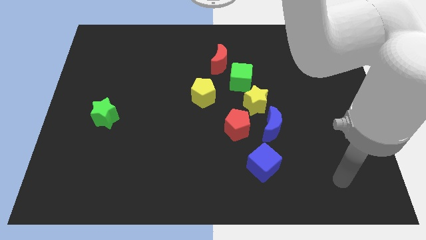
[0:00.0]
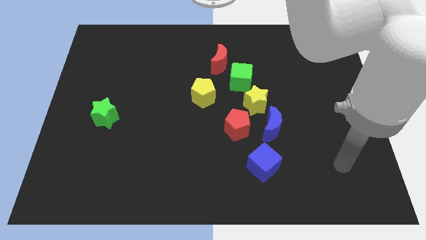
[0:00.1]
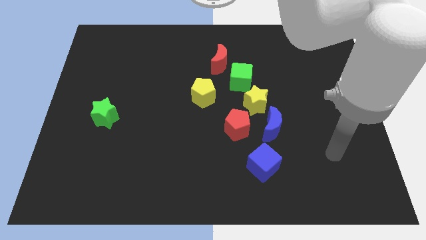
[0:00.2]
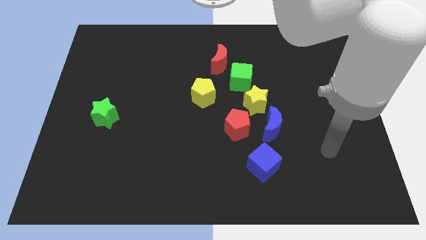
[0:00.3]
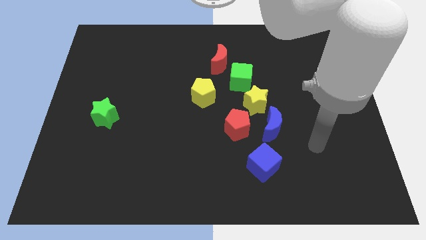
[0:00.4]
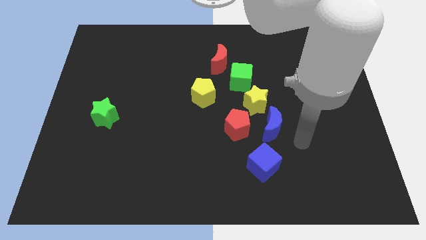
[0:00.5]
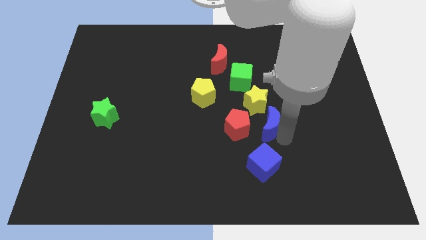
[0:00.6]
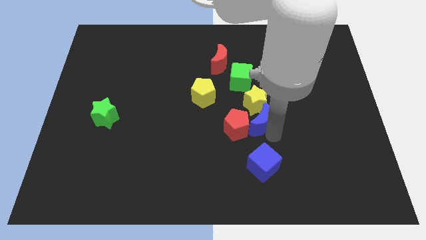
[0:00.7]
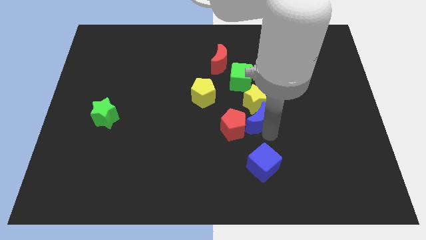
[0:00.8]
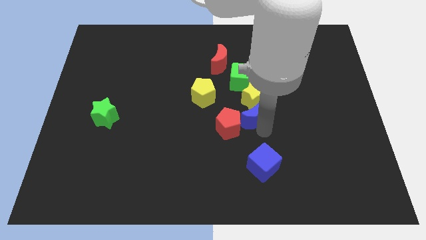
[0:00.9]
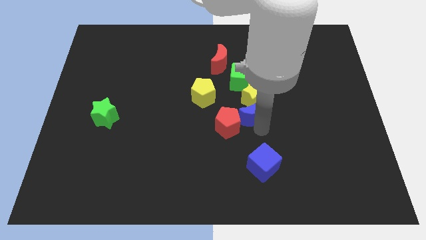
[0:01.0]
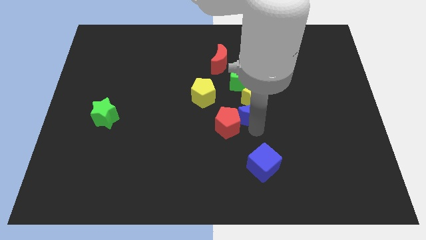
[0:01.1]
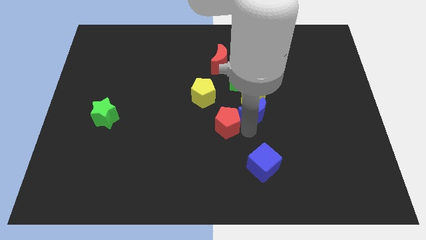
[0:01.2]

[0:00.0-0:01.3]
slide the blue crescent into the yellow star

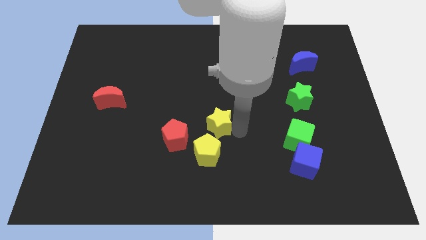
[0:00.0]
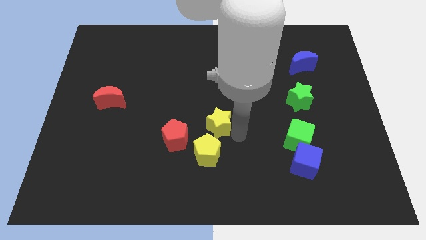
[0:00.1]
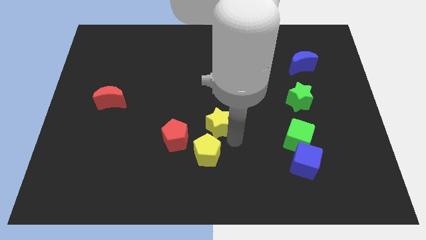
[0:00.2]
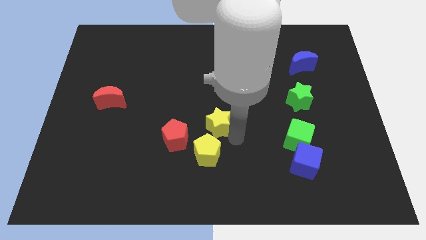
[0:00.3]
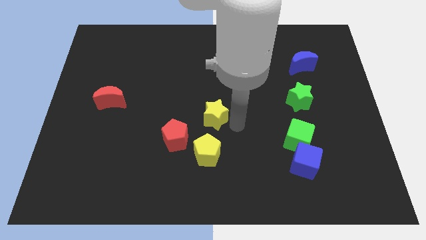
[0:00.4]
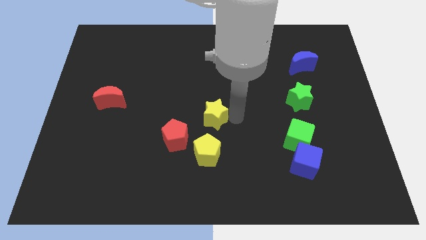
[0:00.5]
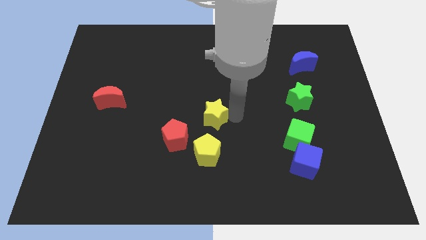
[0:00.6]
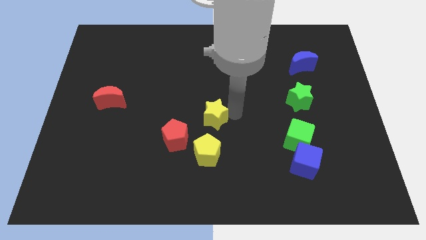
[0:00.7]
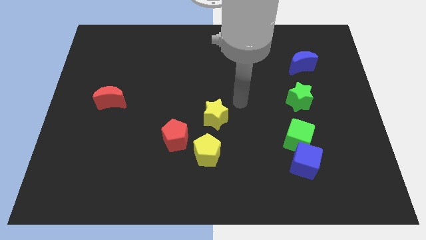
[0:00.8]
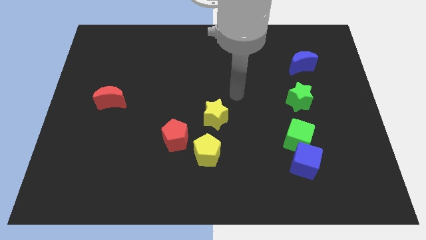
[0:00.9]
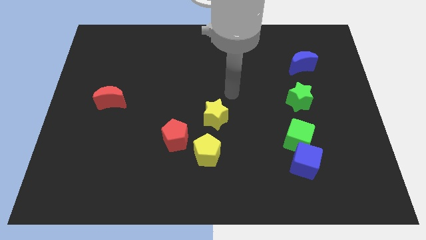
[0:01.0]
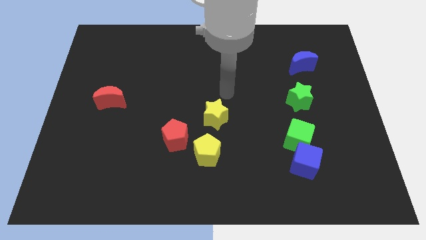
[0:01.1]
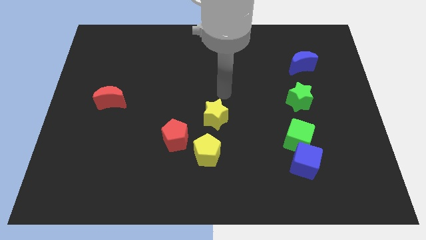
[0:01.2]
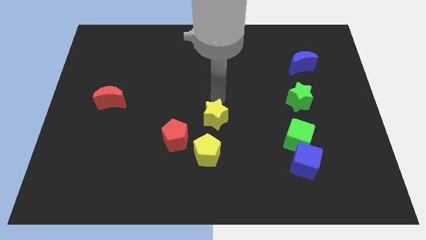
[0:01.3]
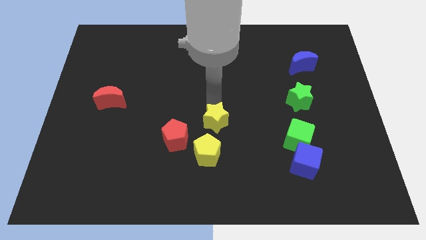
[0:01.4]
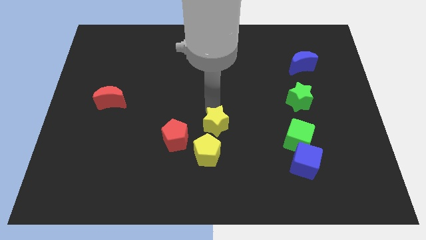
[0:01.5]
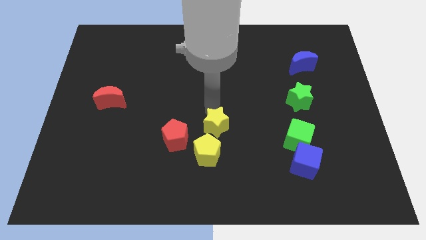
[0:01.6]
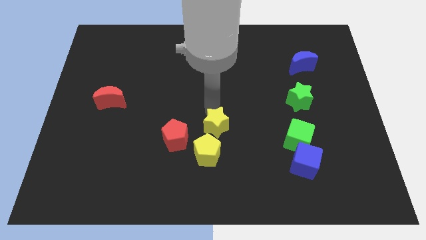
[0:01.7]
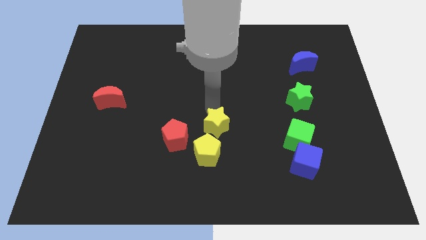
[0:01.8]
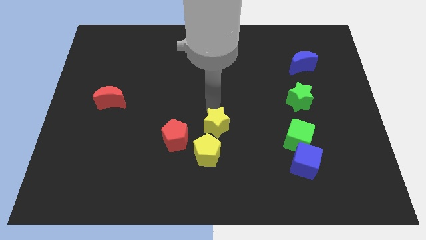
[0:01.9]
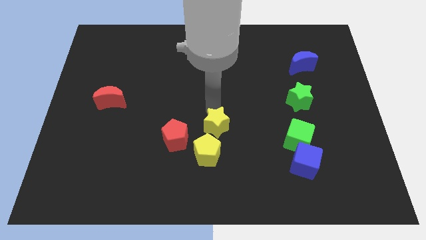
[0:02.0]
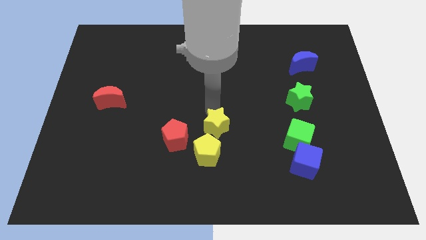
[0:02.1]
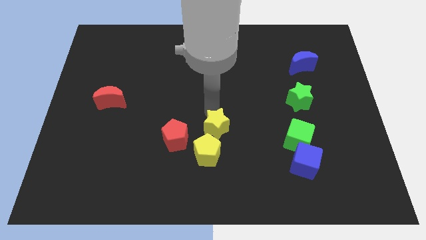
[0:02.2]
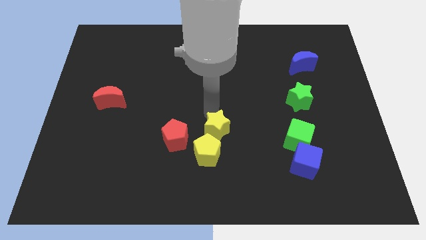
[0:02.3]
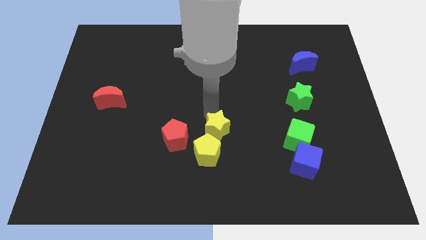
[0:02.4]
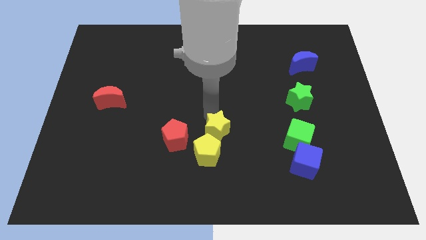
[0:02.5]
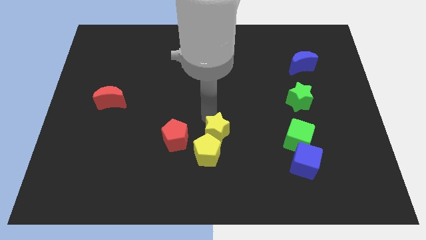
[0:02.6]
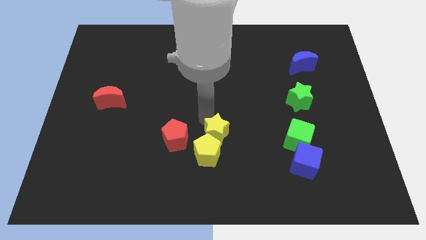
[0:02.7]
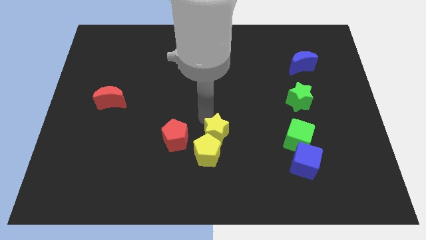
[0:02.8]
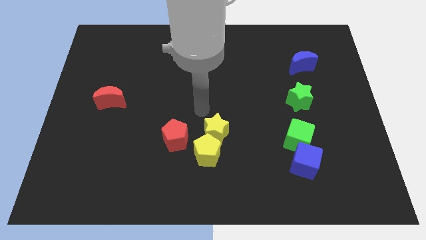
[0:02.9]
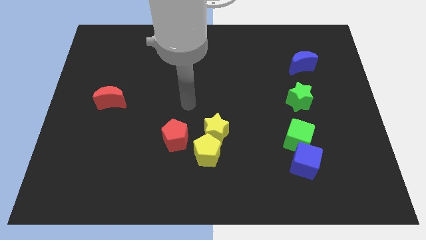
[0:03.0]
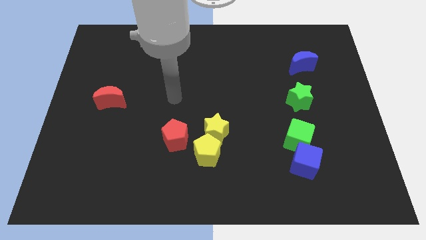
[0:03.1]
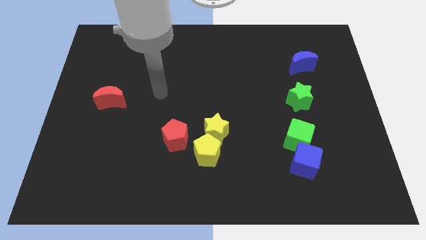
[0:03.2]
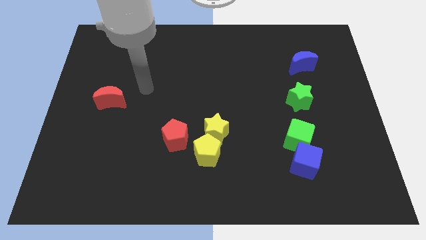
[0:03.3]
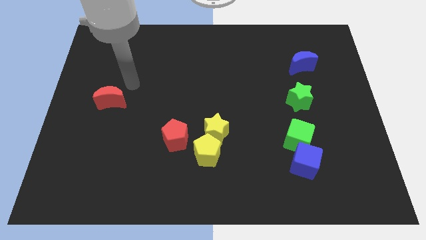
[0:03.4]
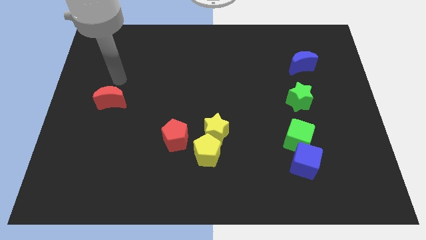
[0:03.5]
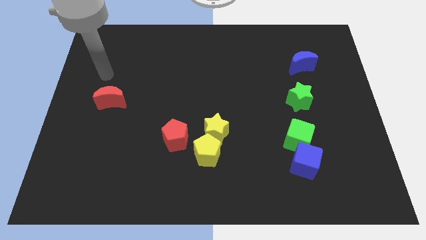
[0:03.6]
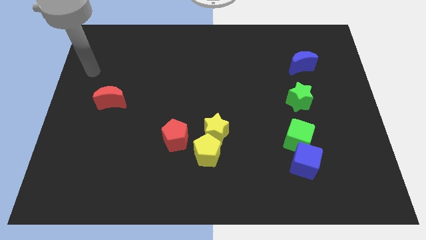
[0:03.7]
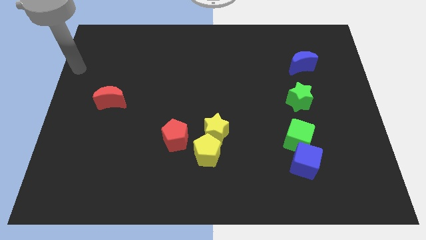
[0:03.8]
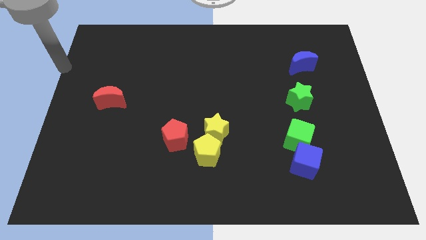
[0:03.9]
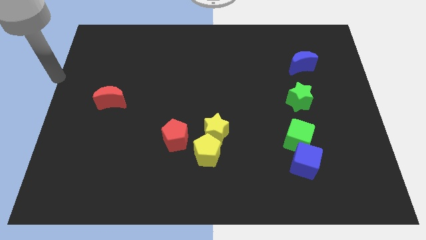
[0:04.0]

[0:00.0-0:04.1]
place the yellow star to the top of the yellow pentagon

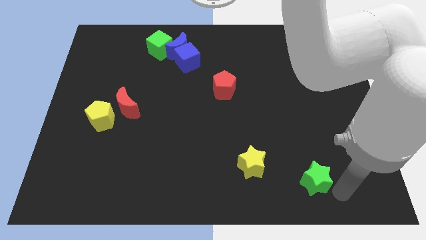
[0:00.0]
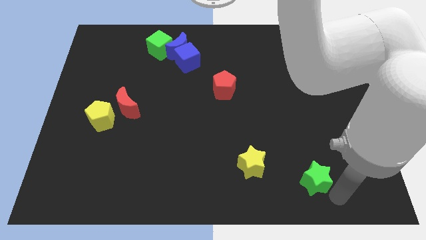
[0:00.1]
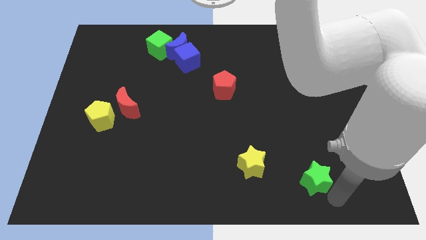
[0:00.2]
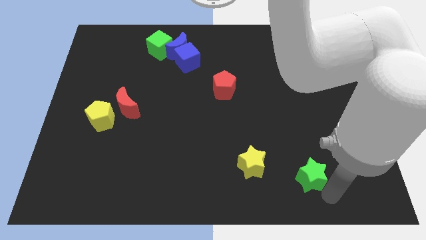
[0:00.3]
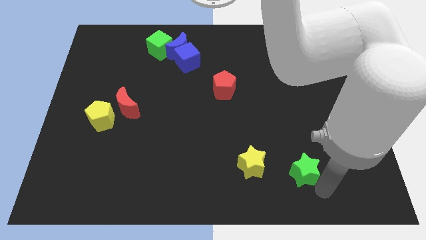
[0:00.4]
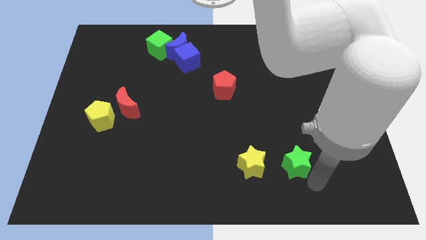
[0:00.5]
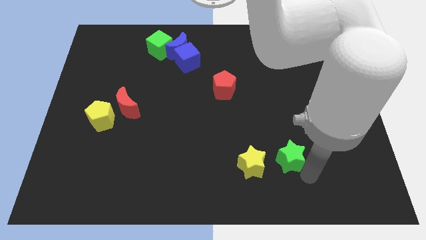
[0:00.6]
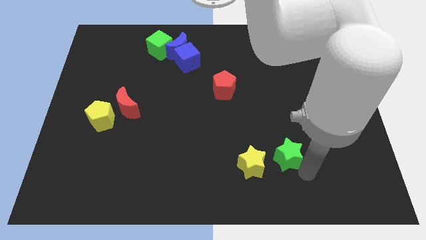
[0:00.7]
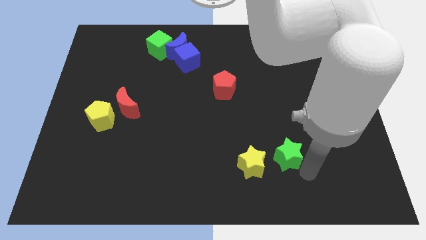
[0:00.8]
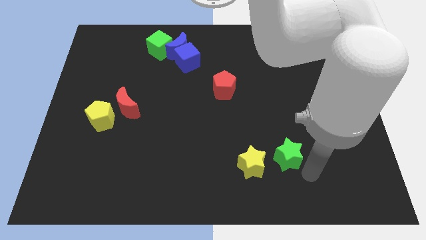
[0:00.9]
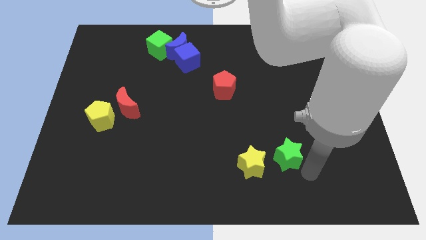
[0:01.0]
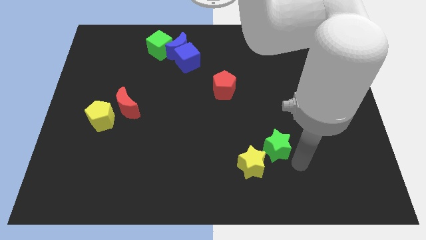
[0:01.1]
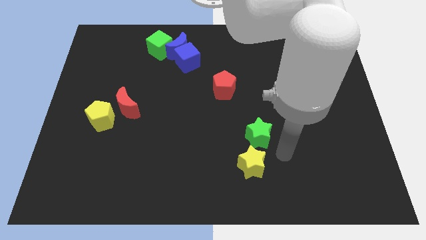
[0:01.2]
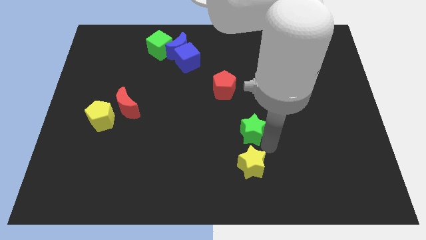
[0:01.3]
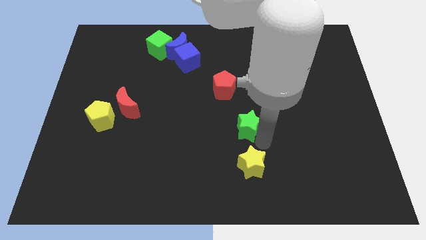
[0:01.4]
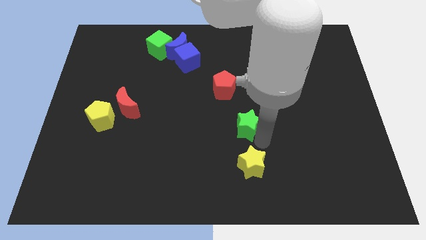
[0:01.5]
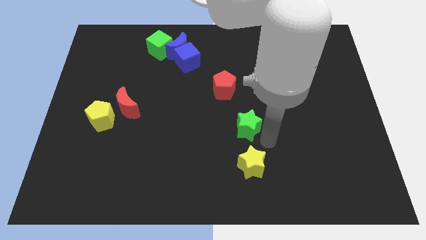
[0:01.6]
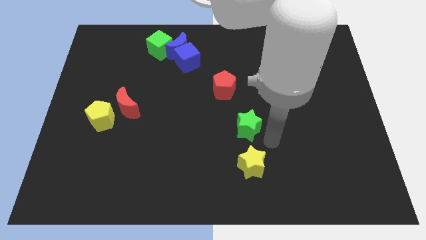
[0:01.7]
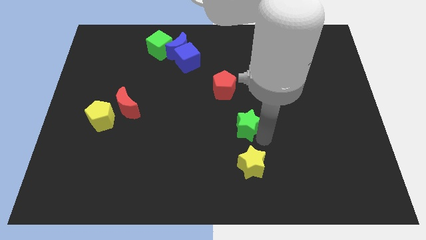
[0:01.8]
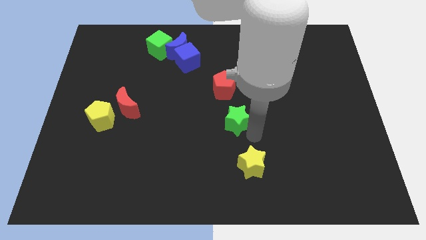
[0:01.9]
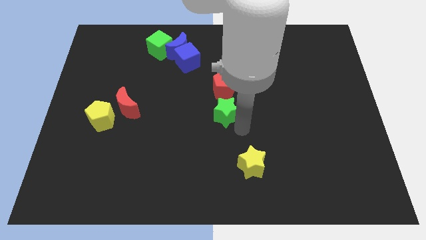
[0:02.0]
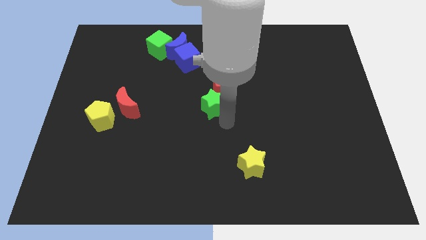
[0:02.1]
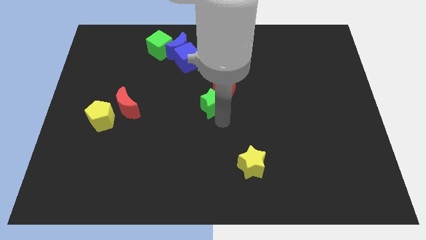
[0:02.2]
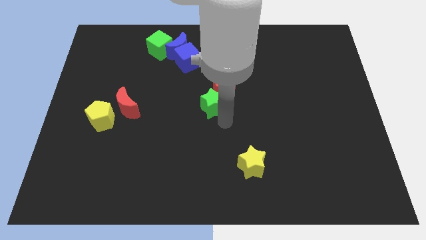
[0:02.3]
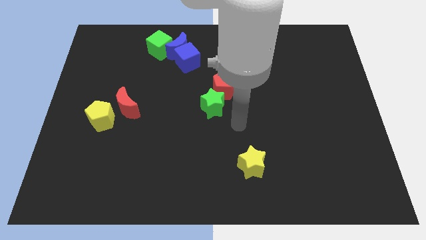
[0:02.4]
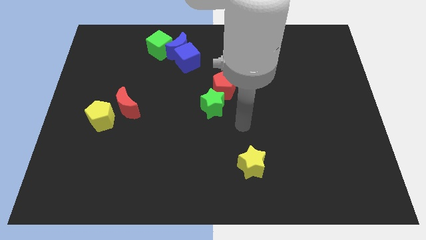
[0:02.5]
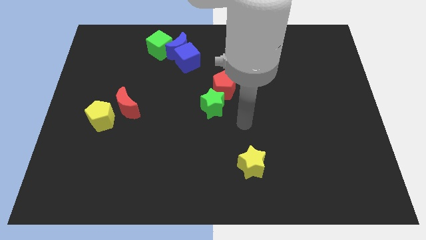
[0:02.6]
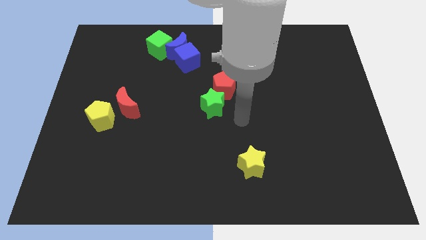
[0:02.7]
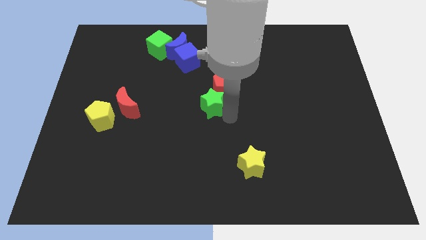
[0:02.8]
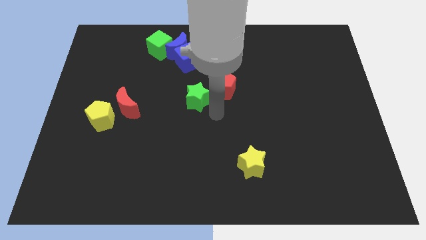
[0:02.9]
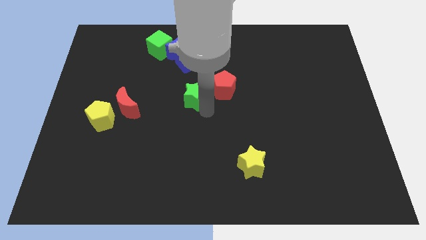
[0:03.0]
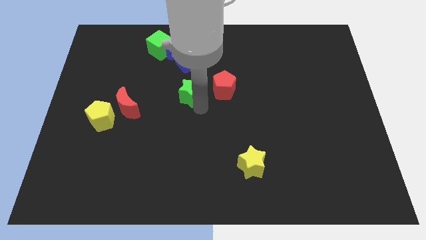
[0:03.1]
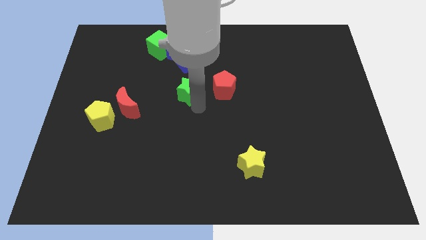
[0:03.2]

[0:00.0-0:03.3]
push the green star towards the left bottom of red pentagon

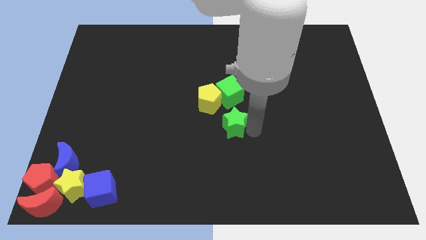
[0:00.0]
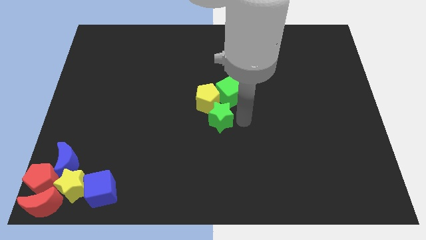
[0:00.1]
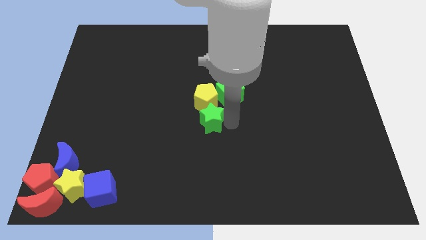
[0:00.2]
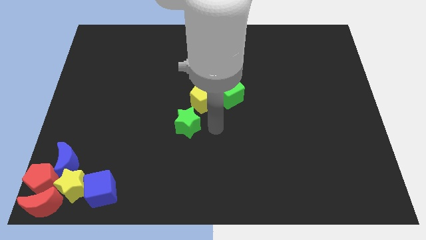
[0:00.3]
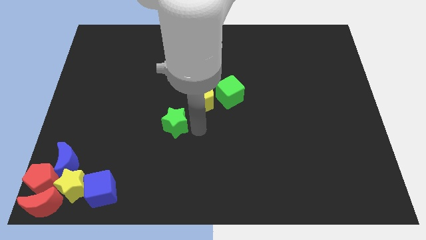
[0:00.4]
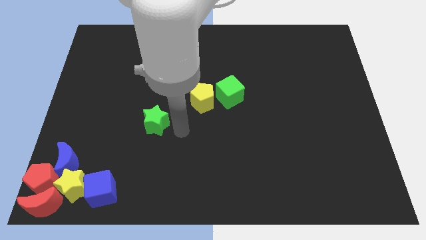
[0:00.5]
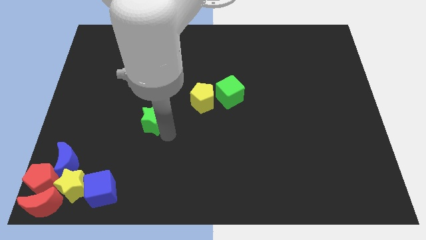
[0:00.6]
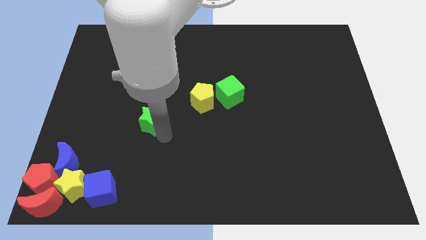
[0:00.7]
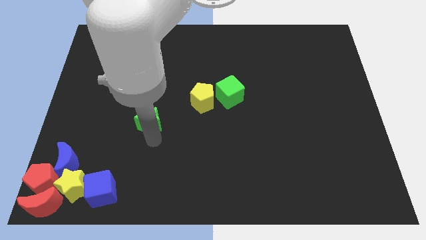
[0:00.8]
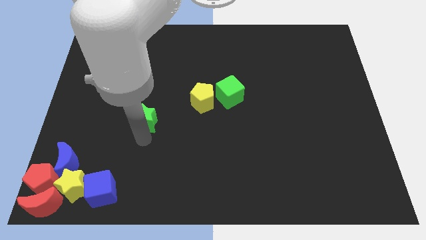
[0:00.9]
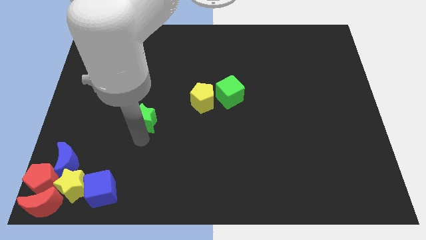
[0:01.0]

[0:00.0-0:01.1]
push the green star towards the left side of the board
